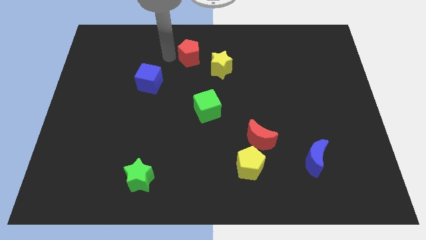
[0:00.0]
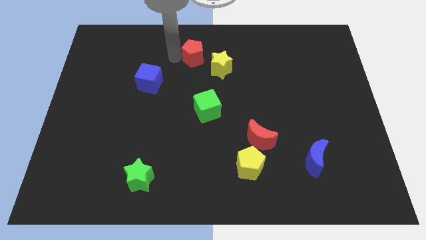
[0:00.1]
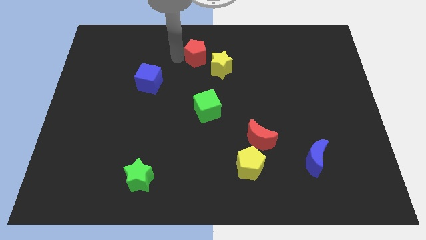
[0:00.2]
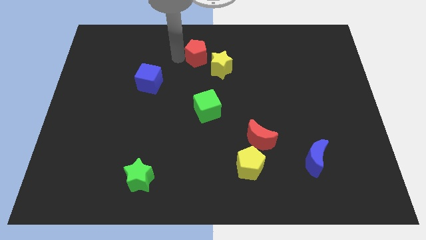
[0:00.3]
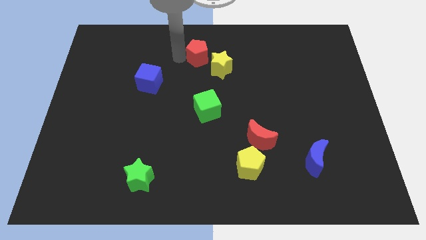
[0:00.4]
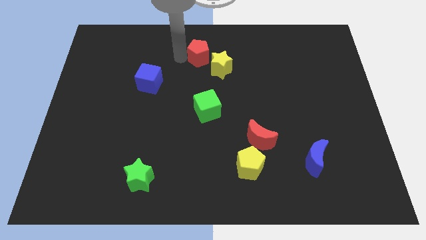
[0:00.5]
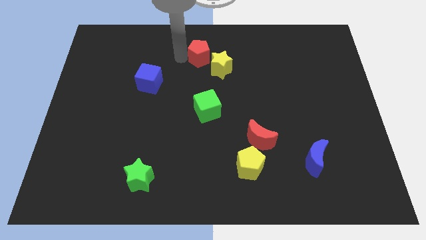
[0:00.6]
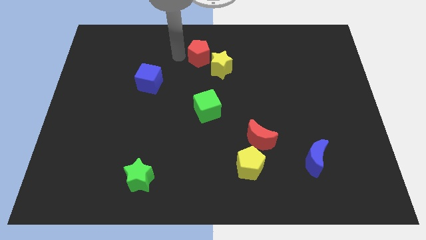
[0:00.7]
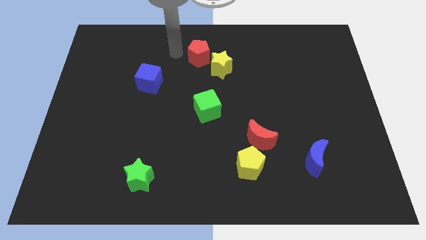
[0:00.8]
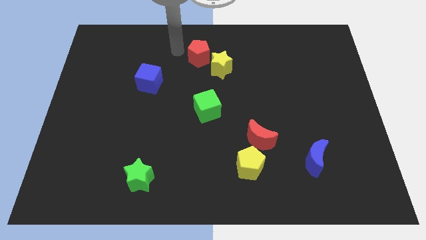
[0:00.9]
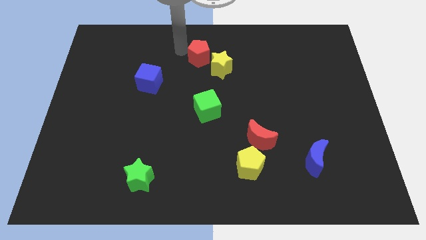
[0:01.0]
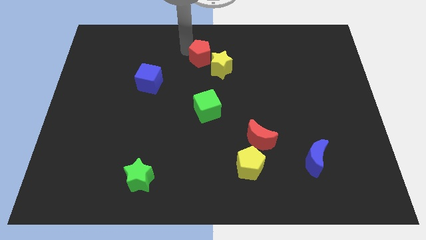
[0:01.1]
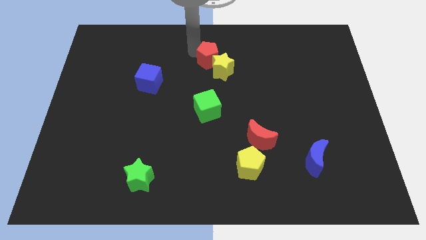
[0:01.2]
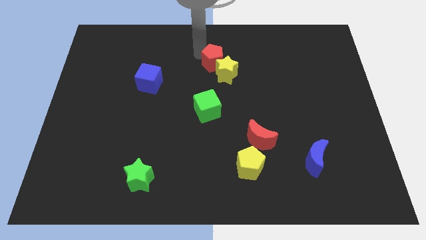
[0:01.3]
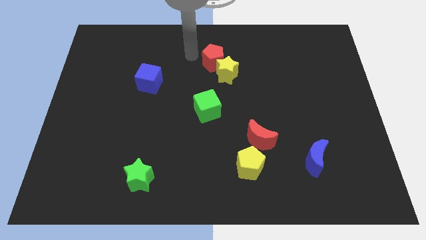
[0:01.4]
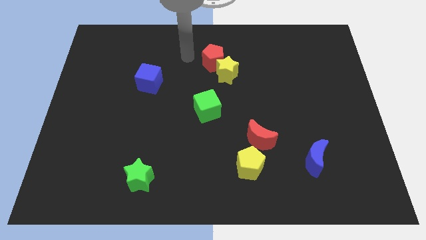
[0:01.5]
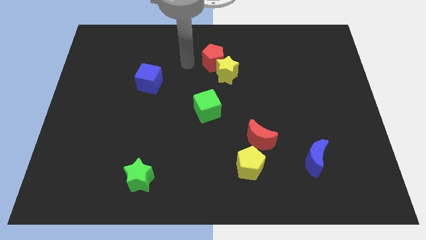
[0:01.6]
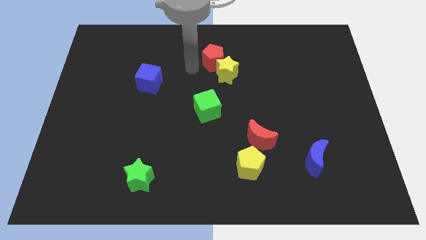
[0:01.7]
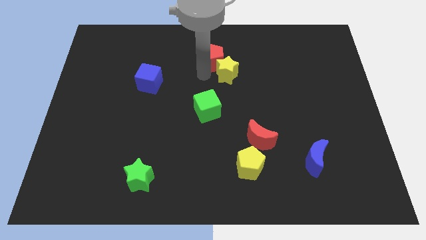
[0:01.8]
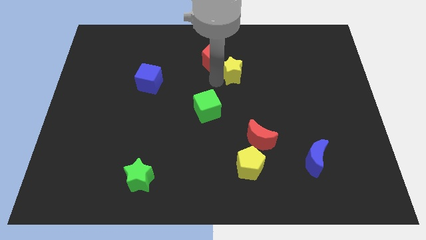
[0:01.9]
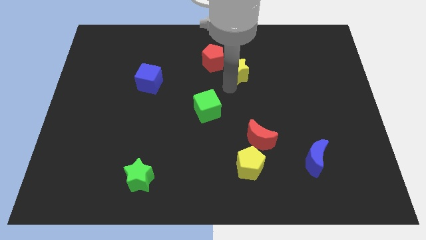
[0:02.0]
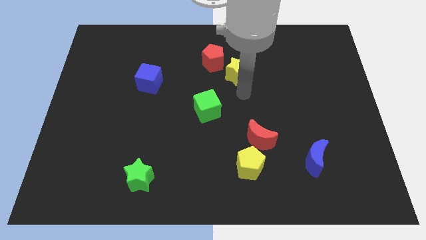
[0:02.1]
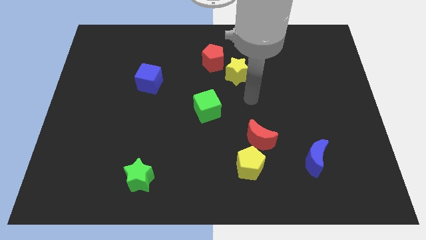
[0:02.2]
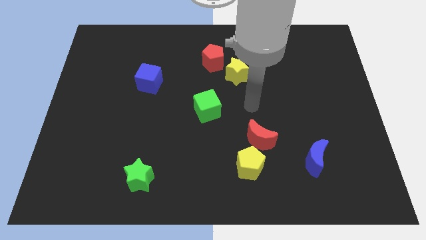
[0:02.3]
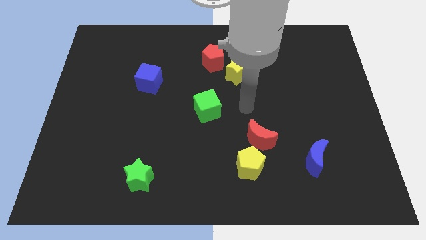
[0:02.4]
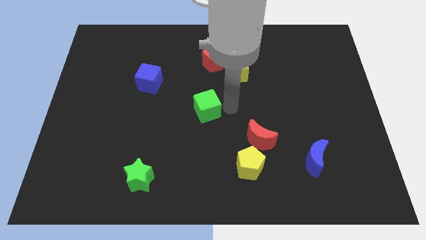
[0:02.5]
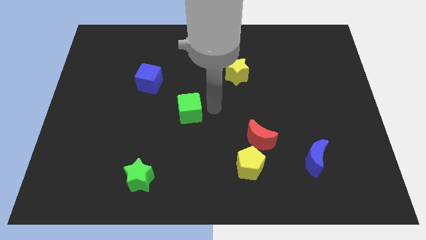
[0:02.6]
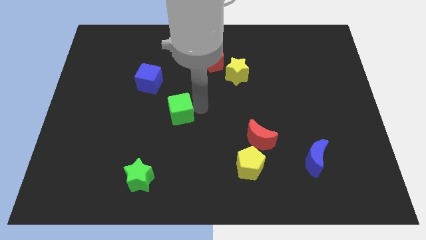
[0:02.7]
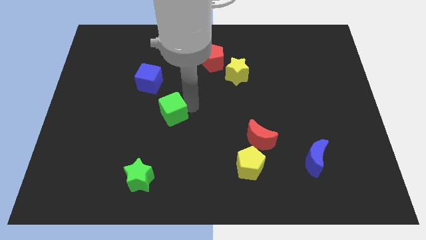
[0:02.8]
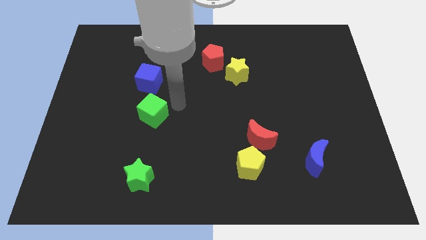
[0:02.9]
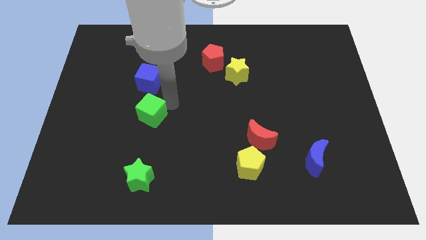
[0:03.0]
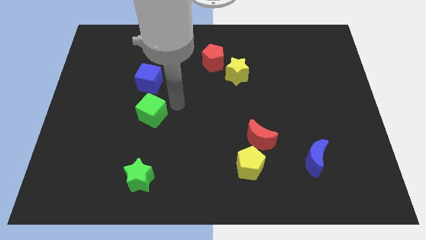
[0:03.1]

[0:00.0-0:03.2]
move the green cube down to the blue cube

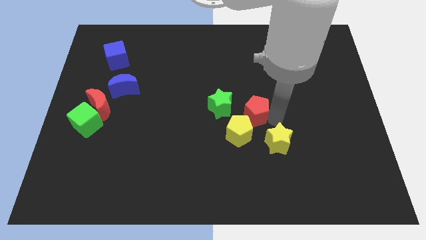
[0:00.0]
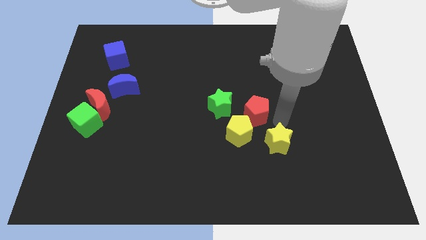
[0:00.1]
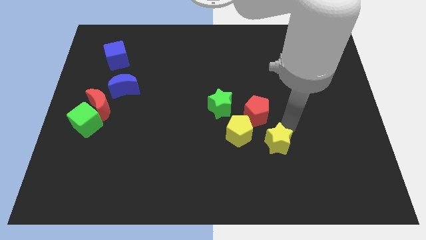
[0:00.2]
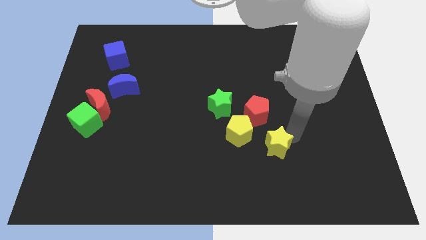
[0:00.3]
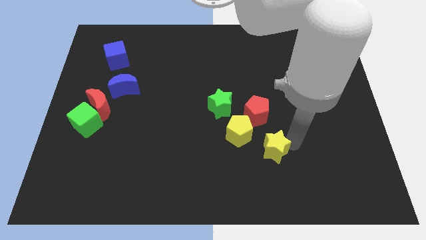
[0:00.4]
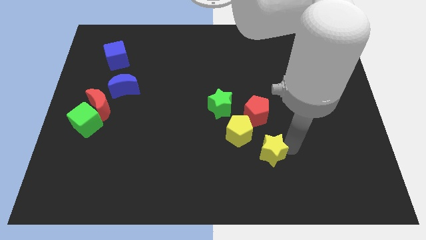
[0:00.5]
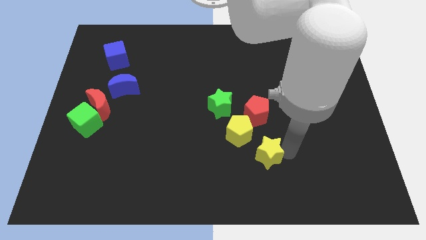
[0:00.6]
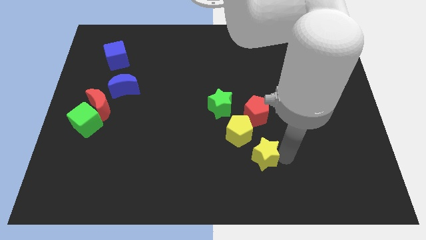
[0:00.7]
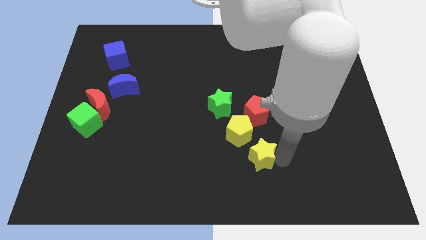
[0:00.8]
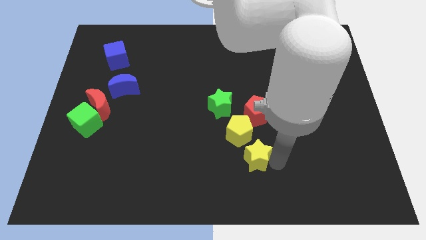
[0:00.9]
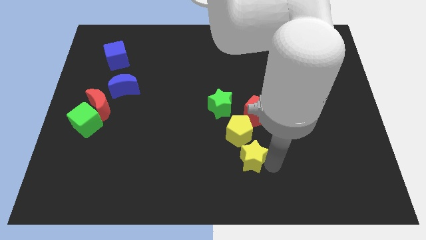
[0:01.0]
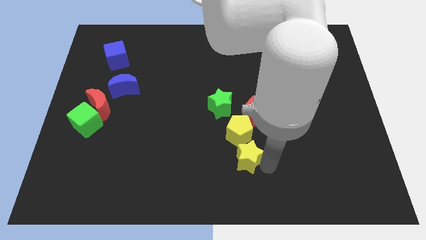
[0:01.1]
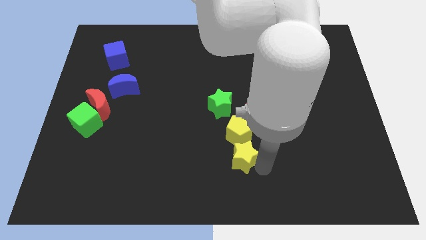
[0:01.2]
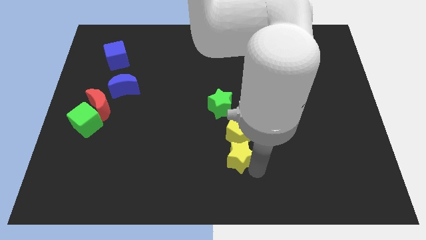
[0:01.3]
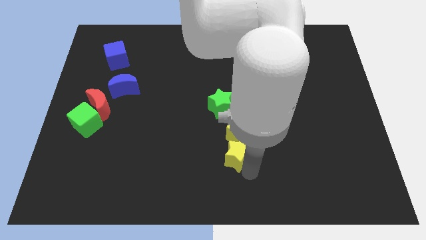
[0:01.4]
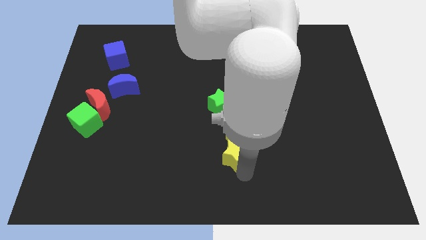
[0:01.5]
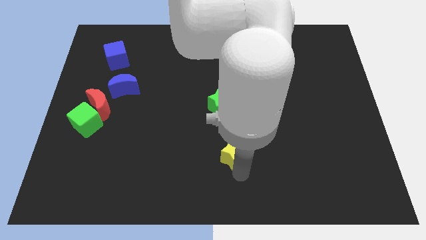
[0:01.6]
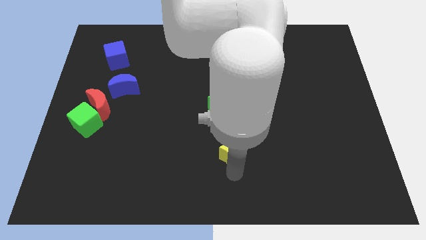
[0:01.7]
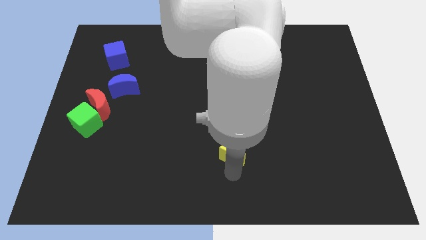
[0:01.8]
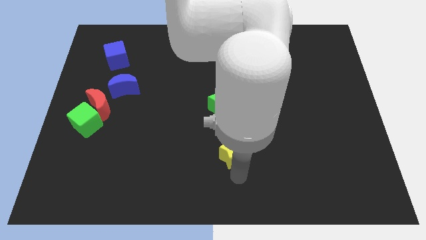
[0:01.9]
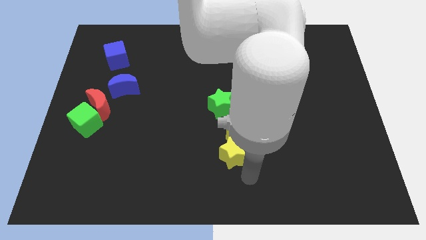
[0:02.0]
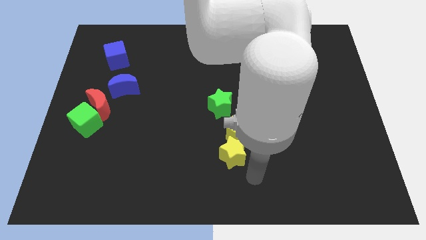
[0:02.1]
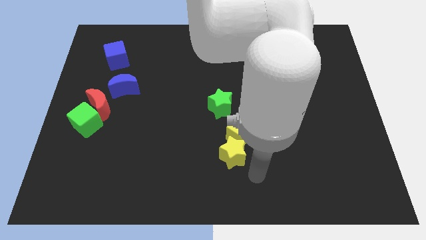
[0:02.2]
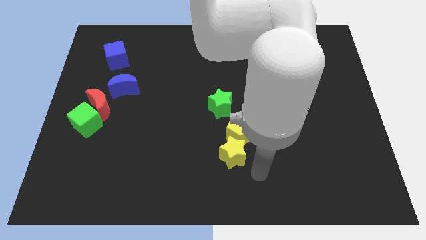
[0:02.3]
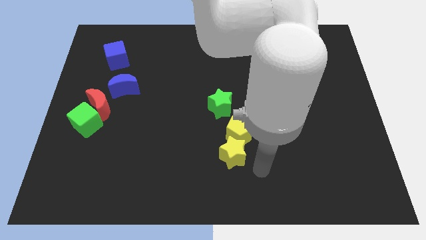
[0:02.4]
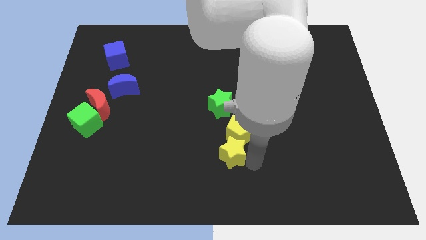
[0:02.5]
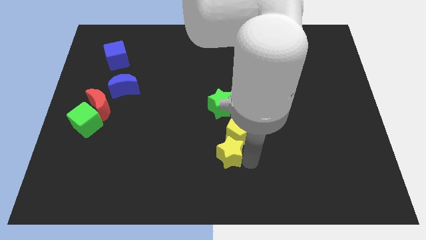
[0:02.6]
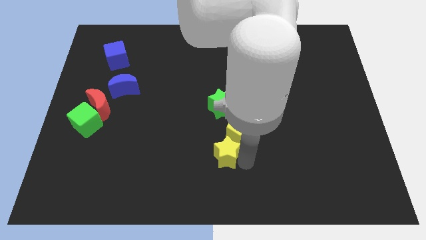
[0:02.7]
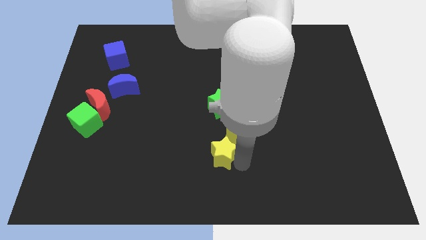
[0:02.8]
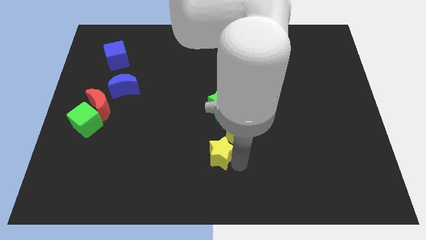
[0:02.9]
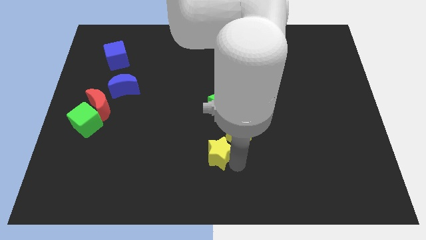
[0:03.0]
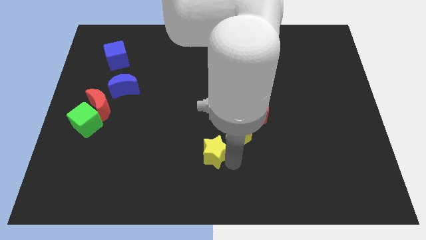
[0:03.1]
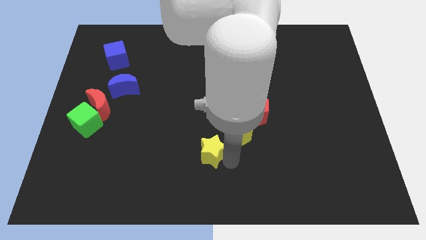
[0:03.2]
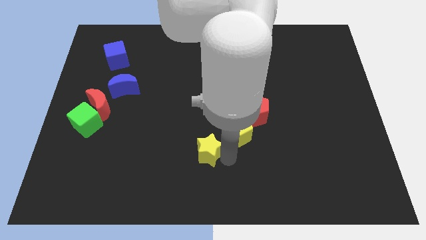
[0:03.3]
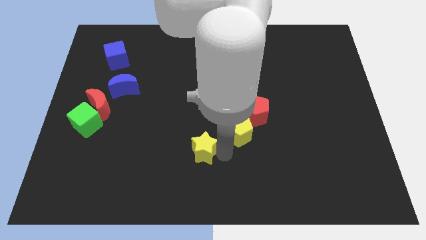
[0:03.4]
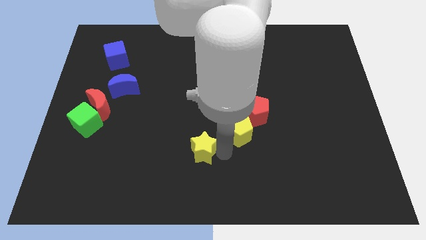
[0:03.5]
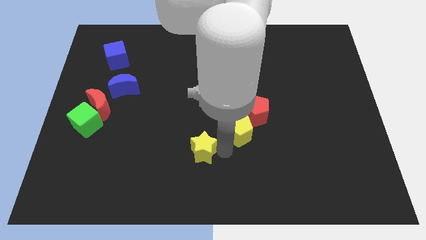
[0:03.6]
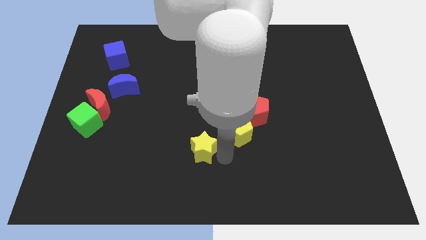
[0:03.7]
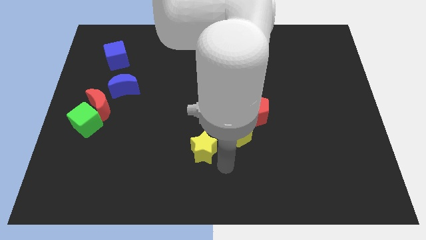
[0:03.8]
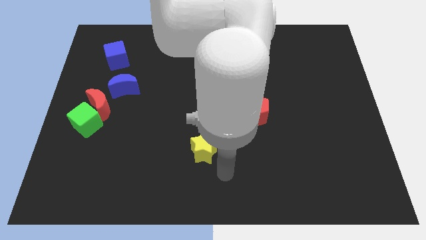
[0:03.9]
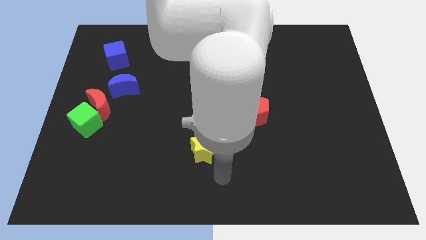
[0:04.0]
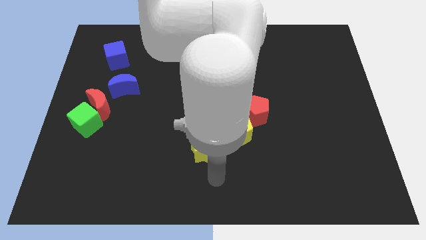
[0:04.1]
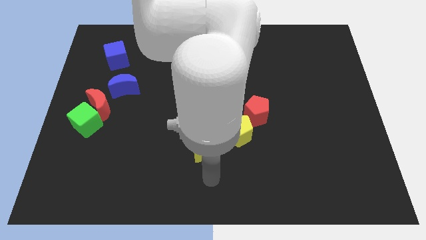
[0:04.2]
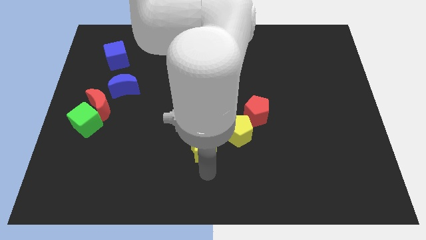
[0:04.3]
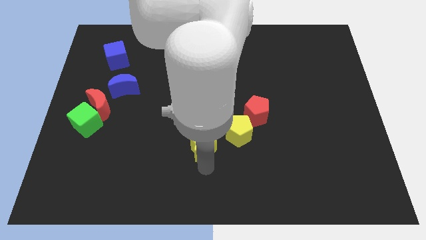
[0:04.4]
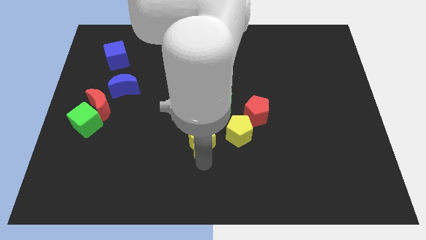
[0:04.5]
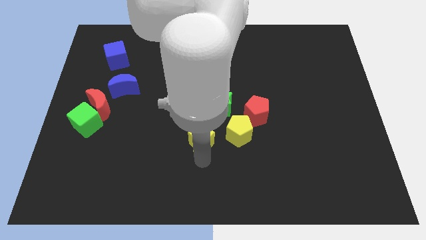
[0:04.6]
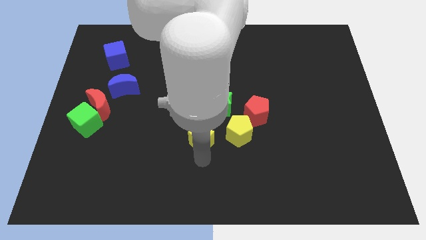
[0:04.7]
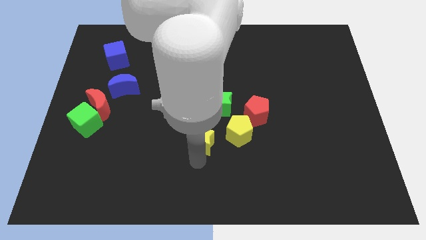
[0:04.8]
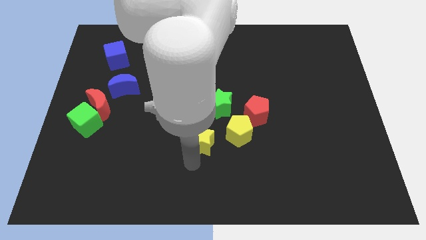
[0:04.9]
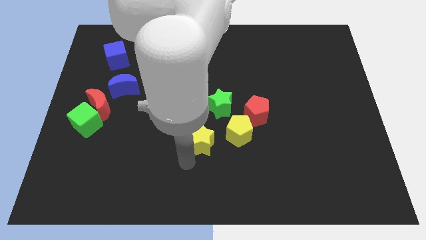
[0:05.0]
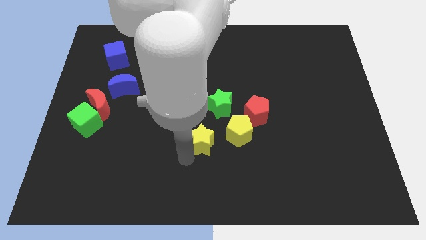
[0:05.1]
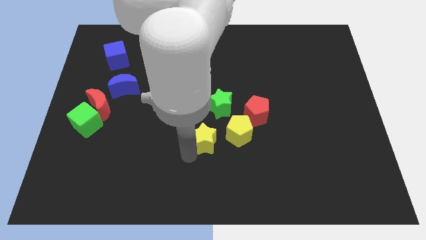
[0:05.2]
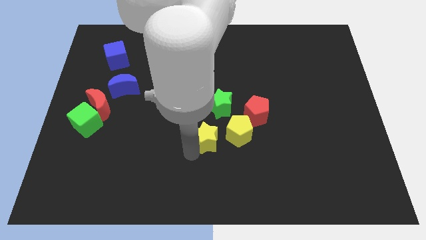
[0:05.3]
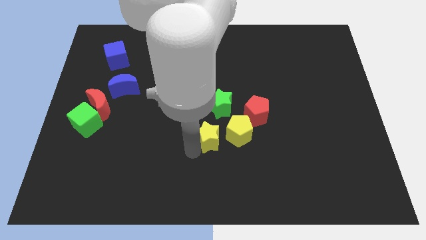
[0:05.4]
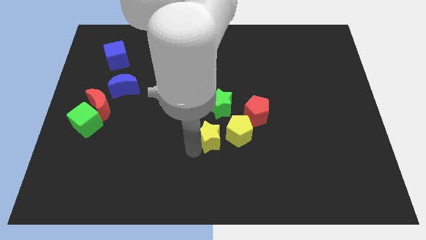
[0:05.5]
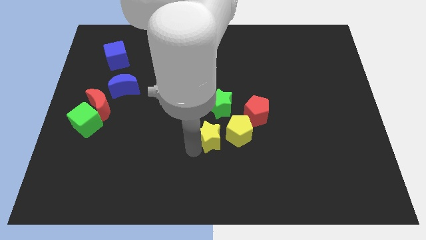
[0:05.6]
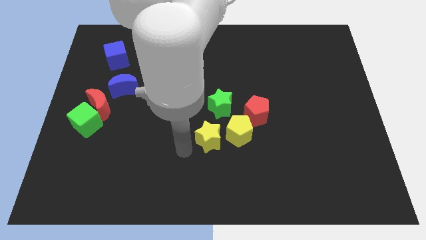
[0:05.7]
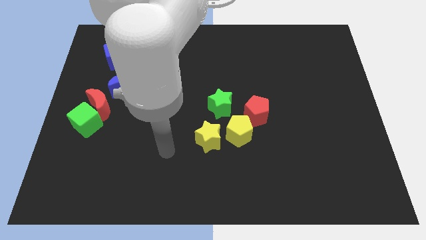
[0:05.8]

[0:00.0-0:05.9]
place the yellow star to the left of the yellow pentagon
